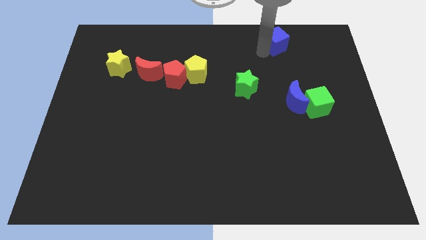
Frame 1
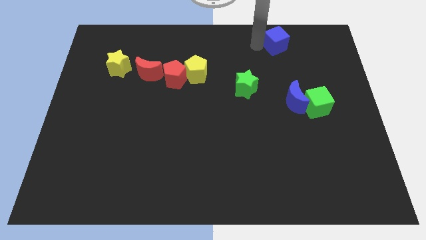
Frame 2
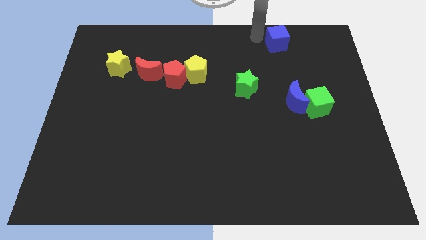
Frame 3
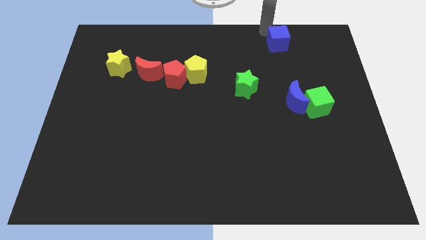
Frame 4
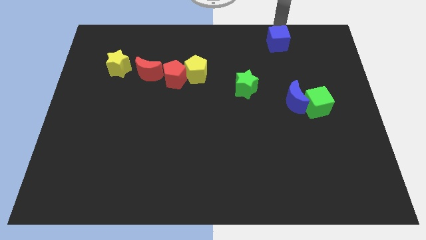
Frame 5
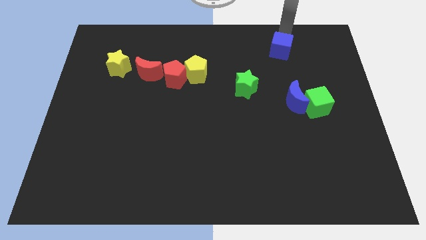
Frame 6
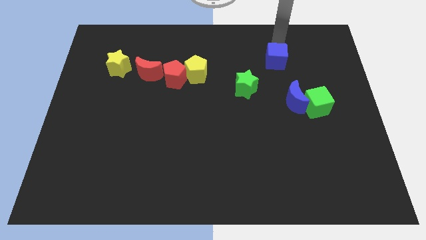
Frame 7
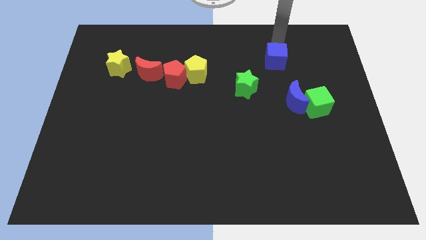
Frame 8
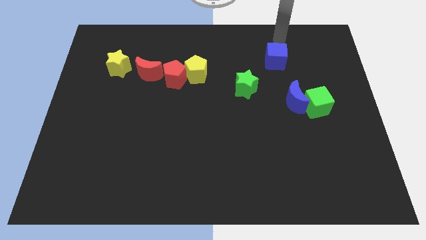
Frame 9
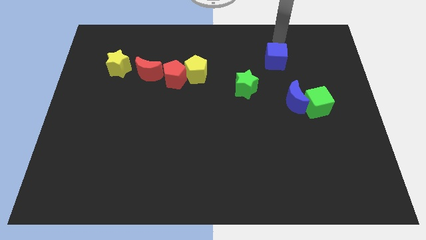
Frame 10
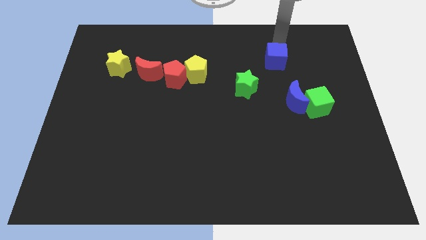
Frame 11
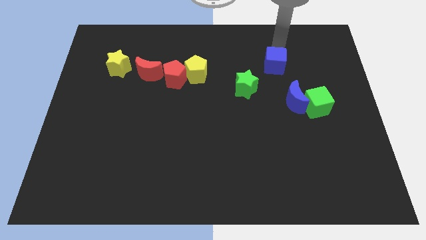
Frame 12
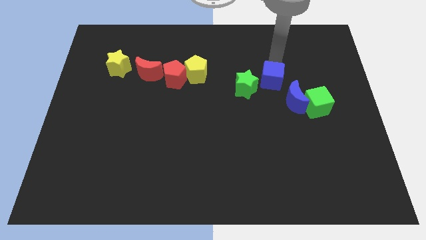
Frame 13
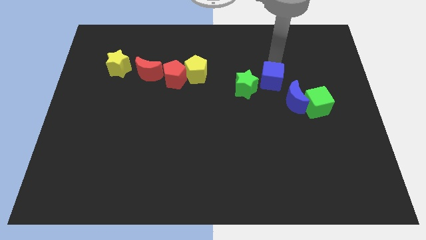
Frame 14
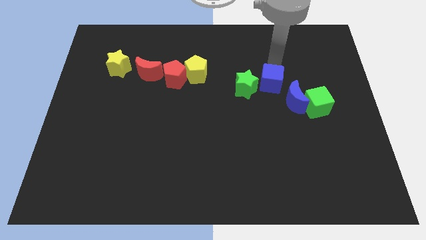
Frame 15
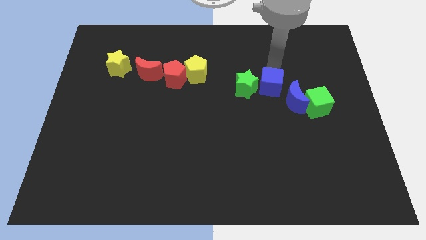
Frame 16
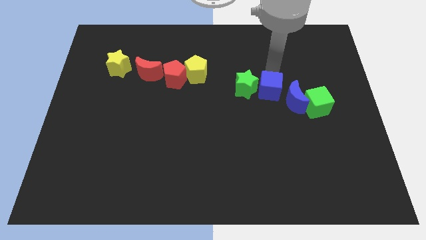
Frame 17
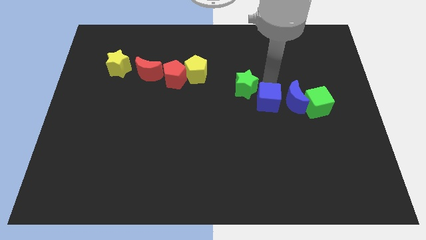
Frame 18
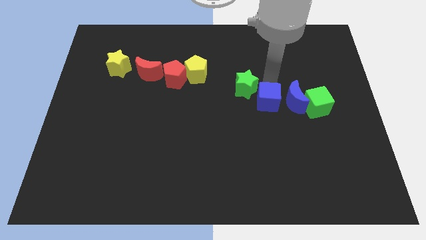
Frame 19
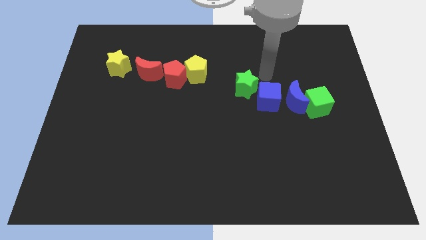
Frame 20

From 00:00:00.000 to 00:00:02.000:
place the blue cube between the green star and blue crescent

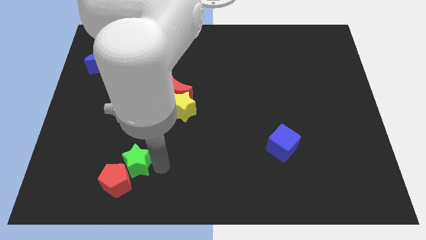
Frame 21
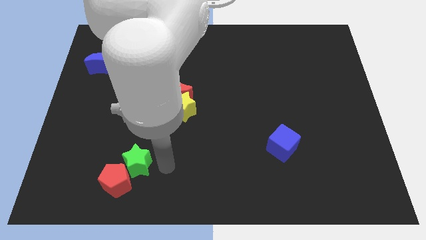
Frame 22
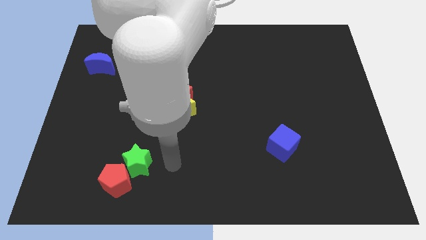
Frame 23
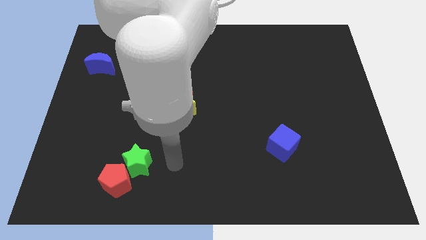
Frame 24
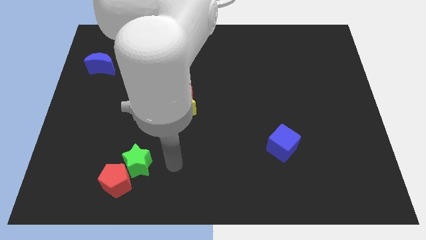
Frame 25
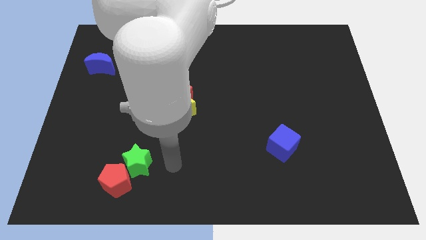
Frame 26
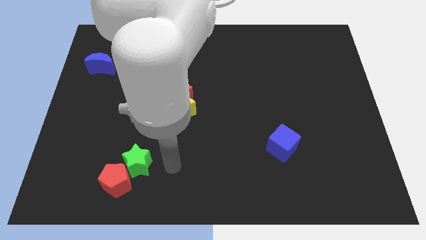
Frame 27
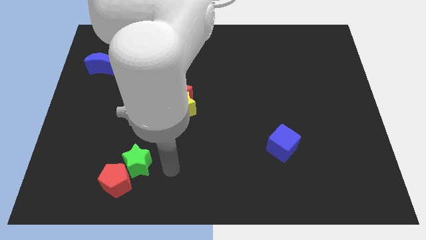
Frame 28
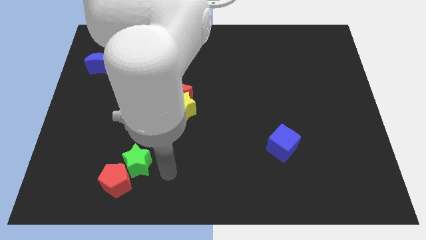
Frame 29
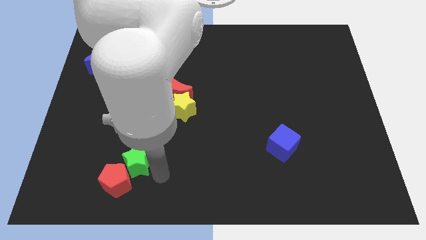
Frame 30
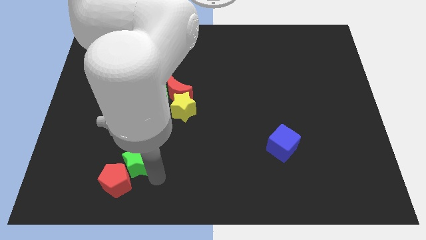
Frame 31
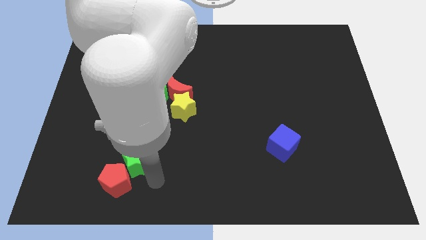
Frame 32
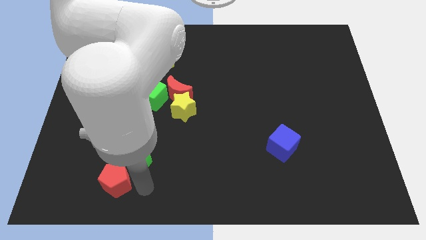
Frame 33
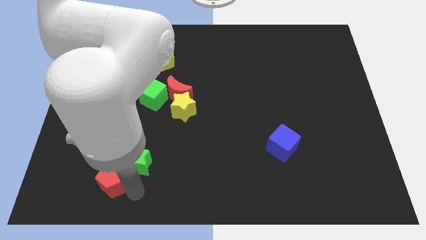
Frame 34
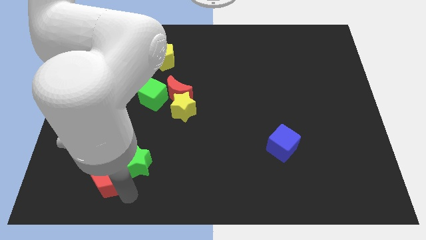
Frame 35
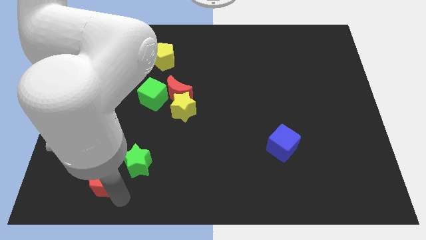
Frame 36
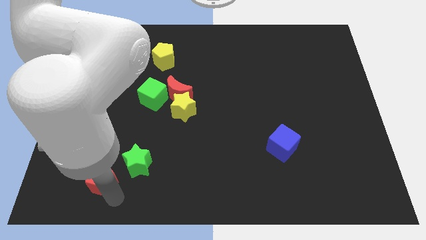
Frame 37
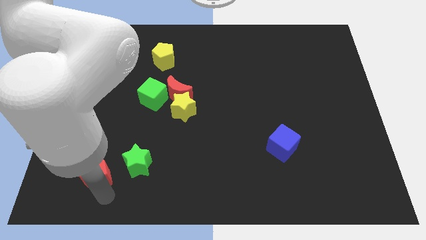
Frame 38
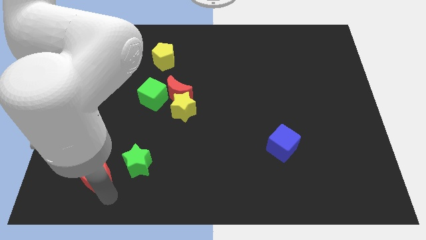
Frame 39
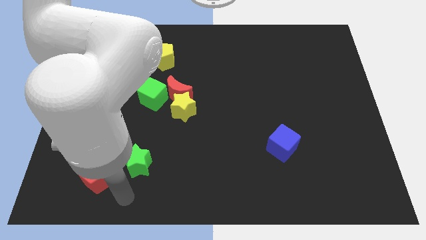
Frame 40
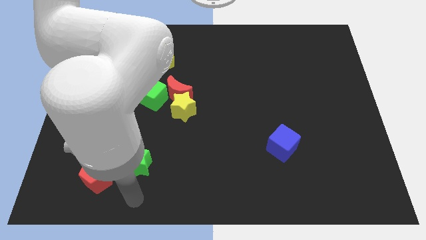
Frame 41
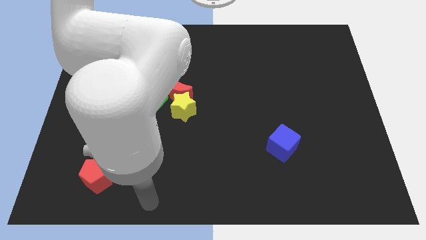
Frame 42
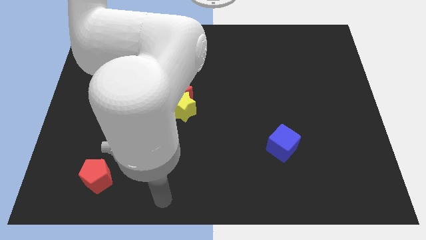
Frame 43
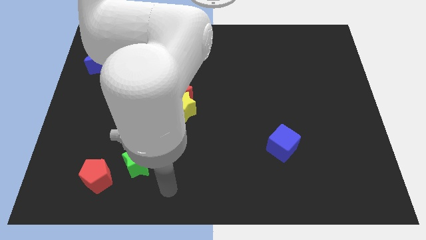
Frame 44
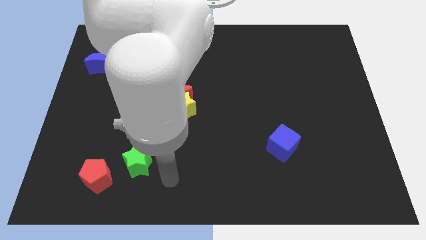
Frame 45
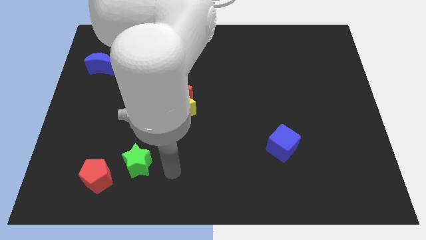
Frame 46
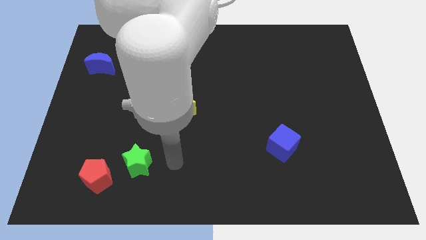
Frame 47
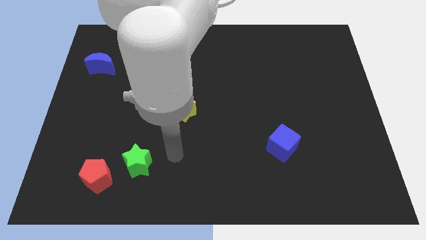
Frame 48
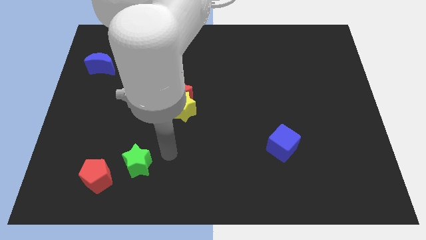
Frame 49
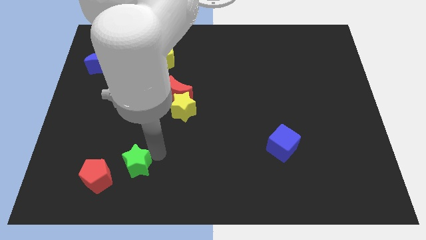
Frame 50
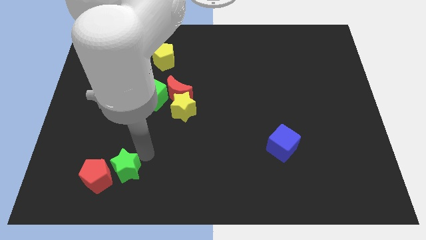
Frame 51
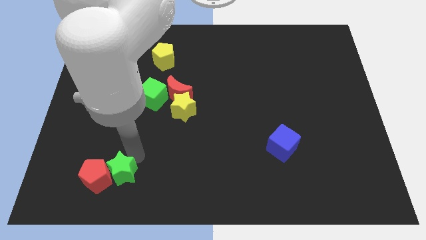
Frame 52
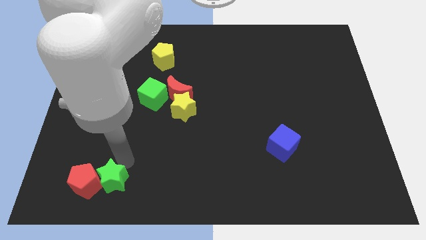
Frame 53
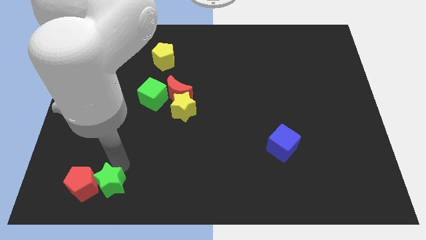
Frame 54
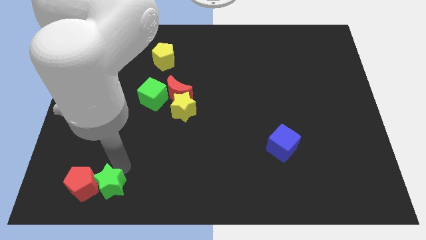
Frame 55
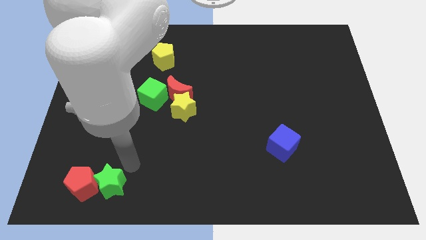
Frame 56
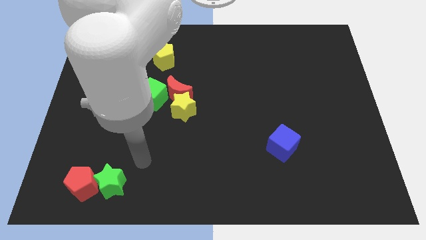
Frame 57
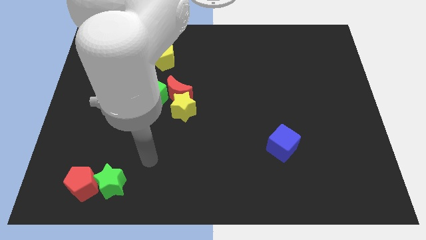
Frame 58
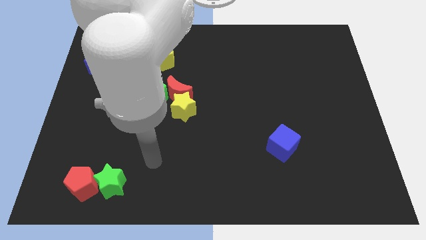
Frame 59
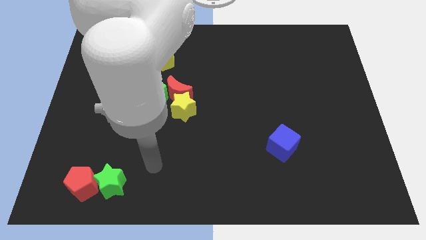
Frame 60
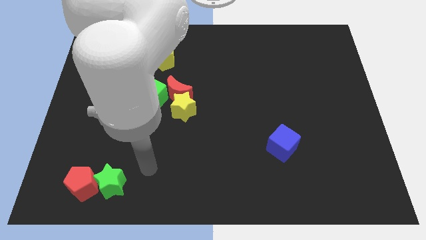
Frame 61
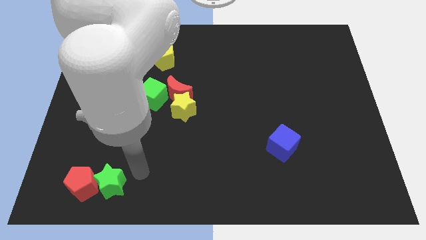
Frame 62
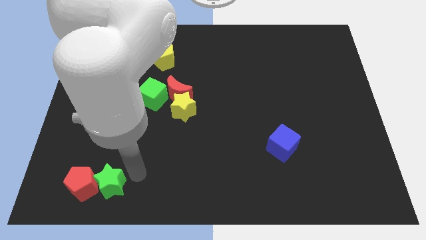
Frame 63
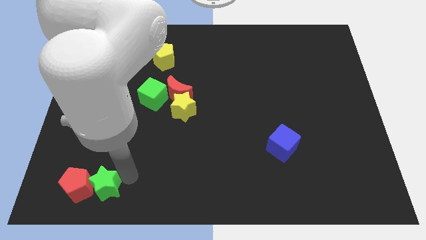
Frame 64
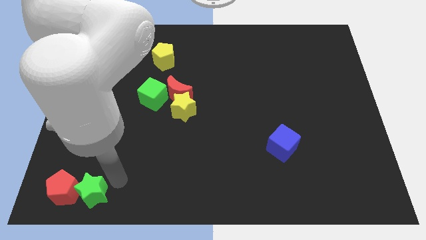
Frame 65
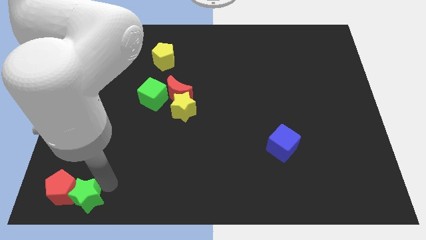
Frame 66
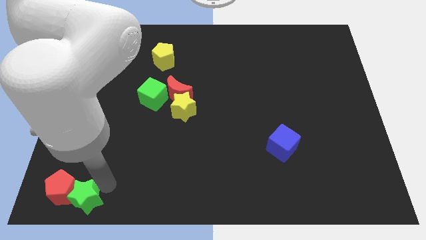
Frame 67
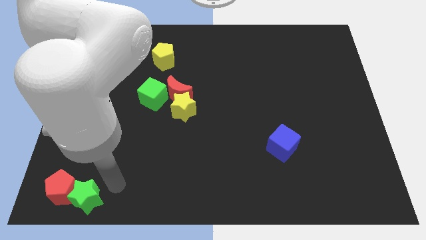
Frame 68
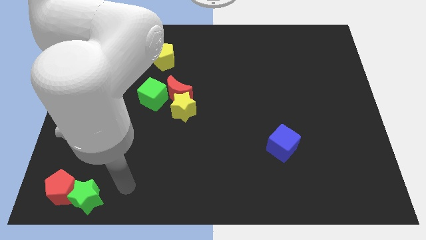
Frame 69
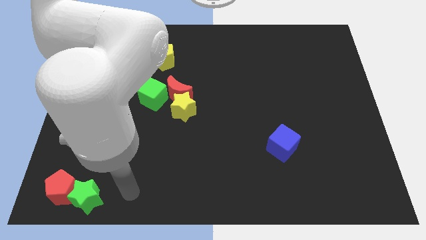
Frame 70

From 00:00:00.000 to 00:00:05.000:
push the green star and red pentagon towards the bottom left corner of the board

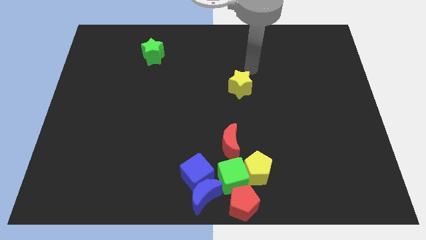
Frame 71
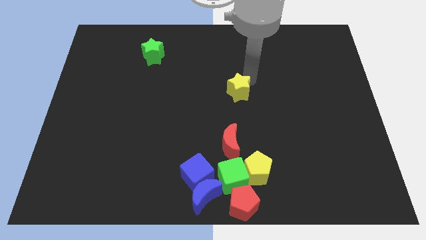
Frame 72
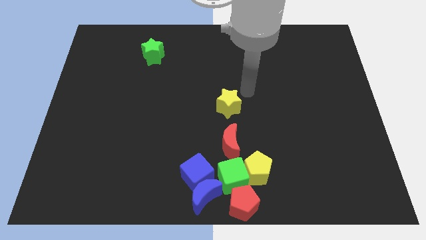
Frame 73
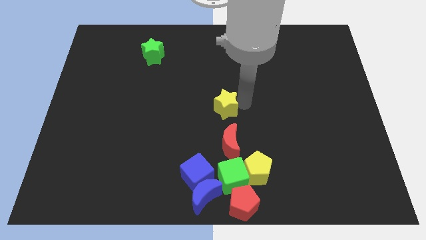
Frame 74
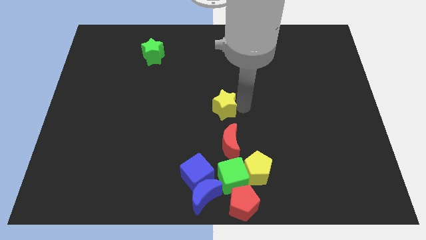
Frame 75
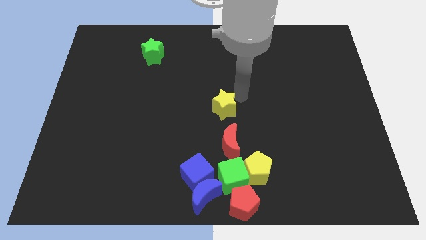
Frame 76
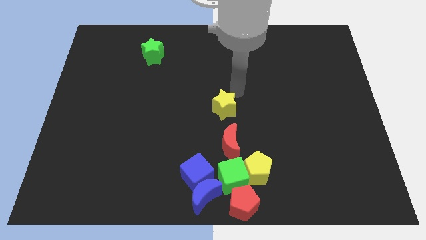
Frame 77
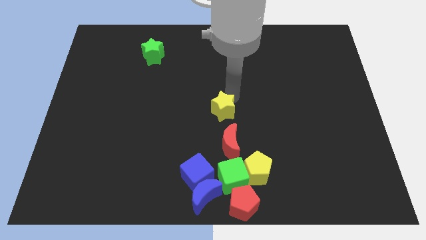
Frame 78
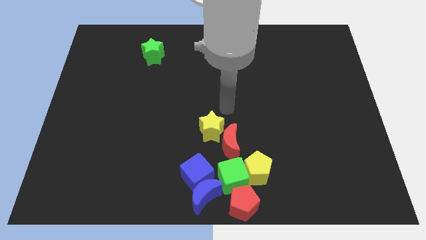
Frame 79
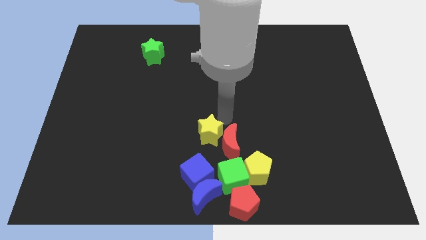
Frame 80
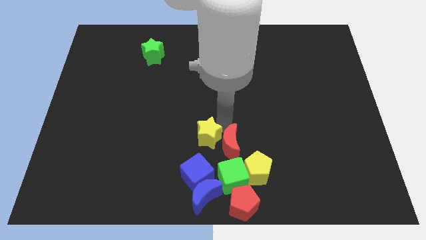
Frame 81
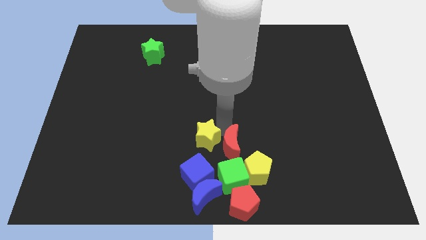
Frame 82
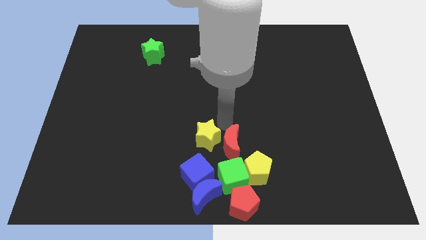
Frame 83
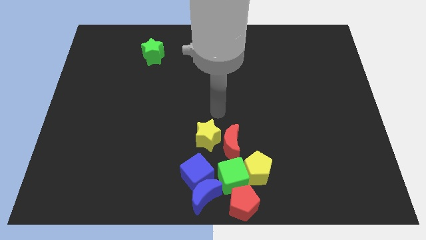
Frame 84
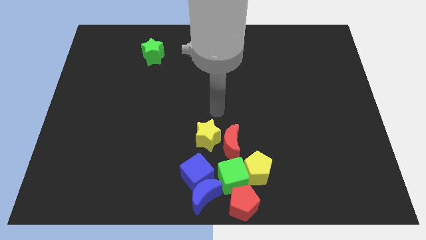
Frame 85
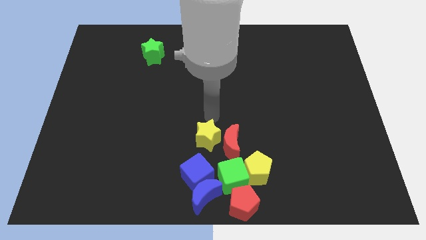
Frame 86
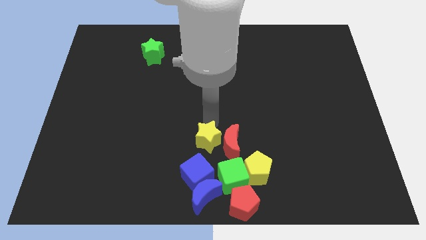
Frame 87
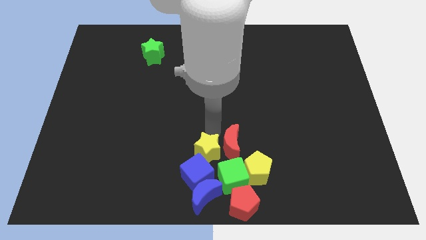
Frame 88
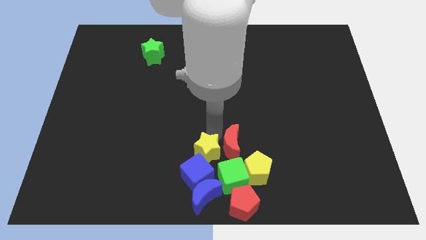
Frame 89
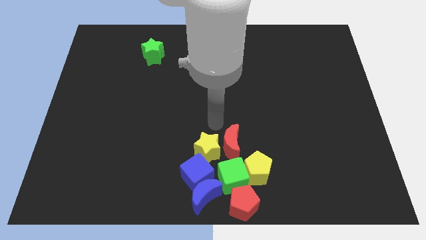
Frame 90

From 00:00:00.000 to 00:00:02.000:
move the yellow star to the left of the red crescent

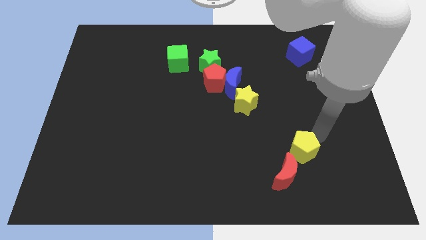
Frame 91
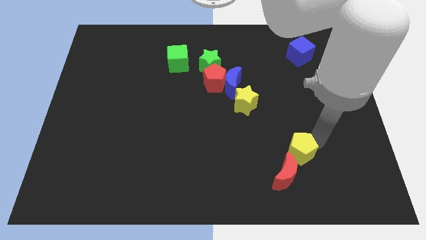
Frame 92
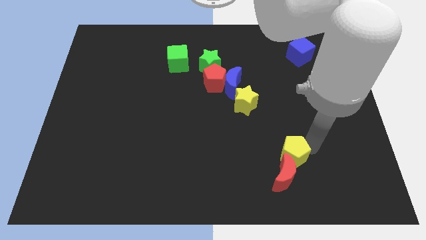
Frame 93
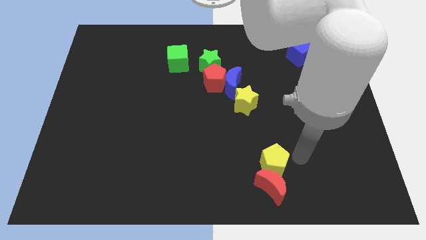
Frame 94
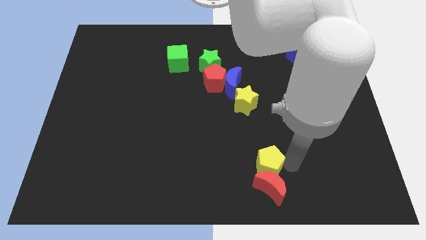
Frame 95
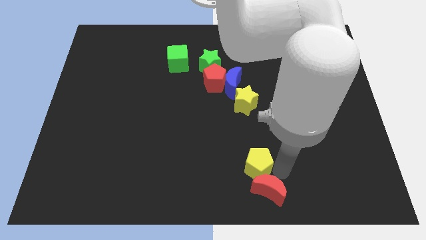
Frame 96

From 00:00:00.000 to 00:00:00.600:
push the yellow pentagon and red moon towards the bottom side of the board
